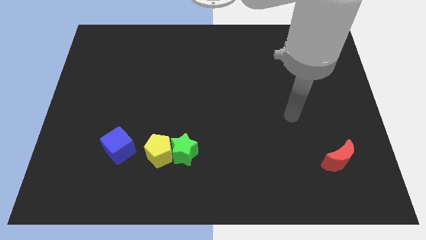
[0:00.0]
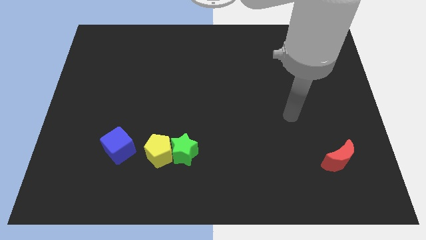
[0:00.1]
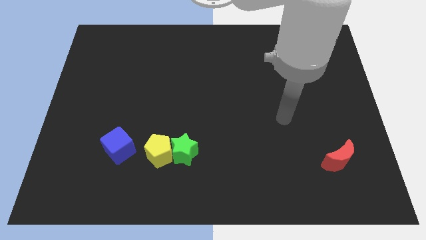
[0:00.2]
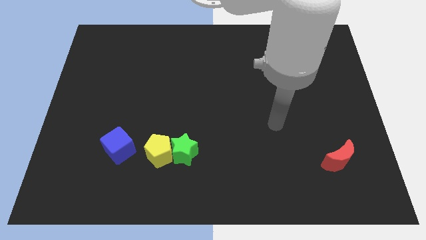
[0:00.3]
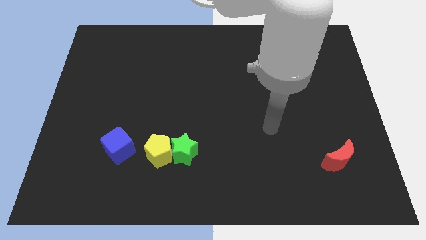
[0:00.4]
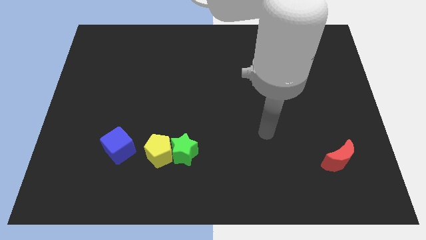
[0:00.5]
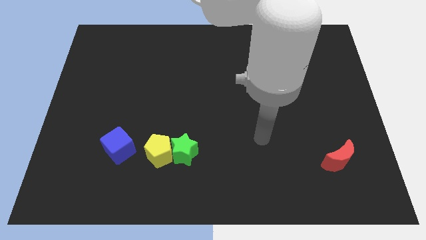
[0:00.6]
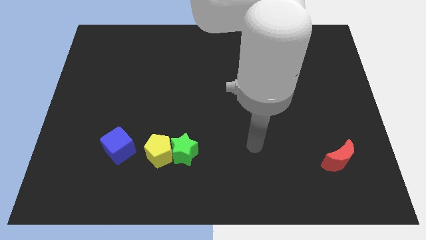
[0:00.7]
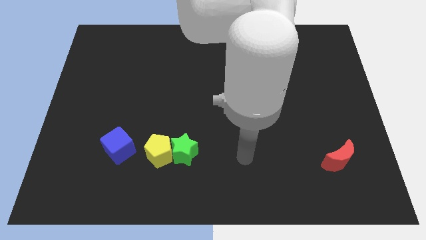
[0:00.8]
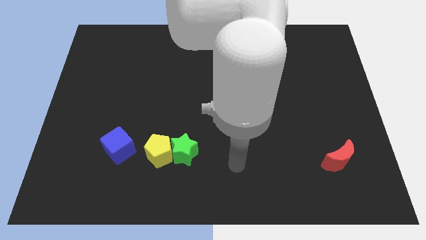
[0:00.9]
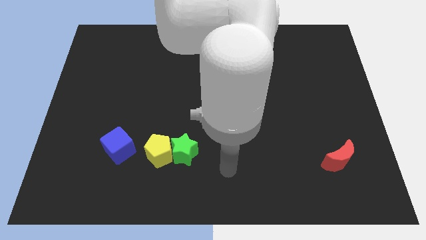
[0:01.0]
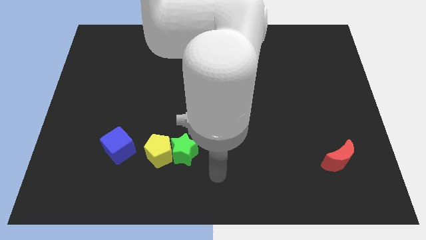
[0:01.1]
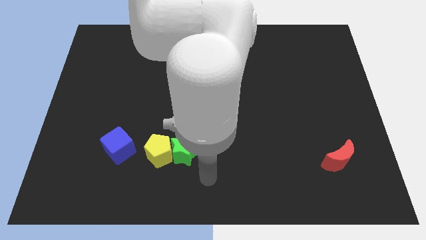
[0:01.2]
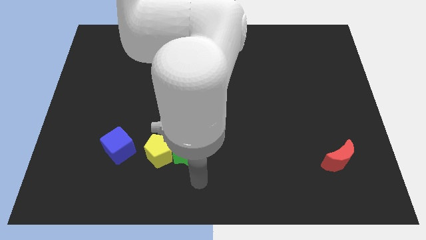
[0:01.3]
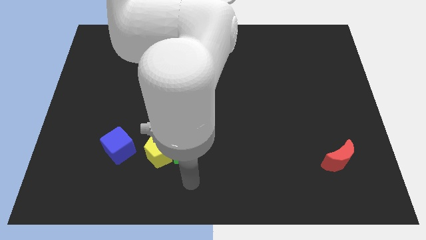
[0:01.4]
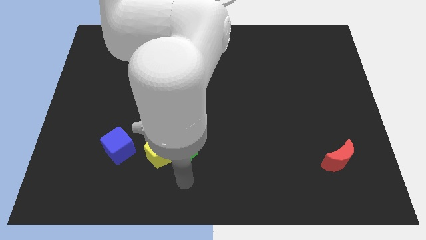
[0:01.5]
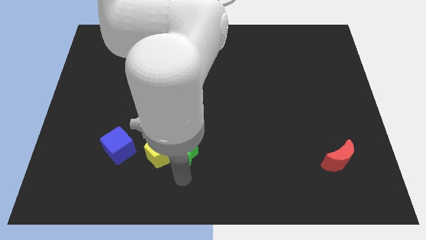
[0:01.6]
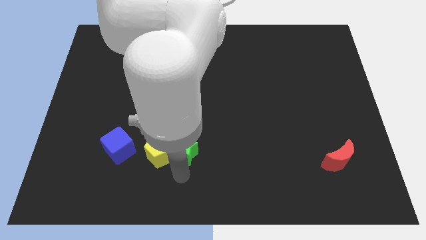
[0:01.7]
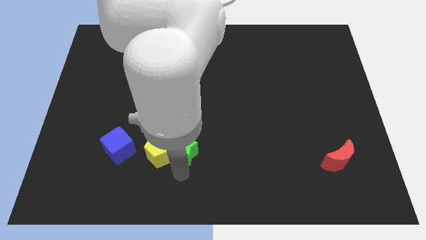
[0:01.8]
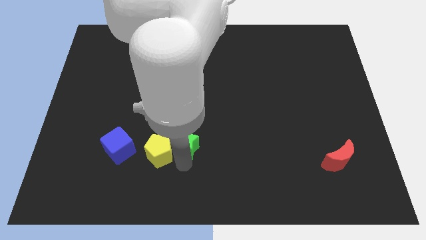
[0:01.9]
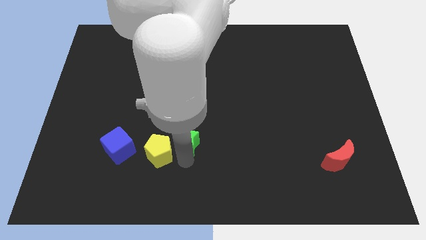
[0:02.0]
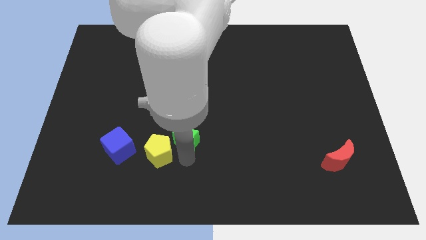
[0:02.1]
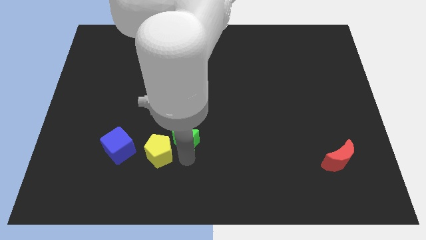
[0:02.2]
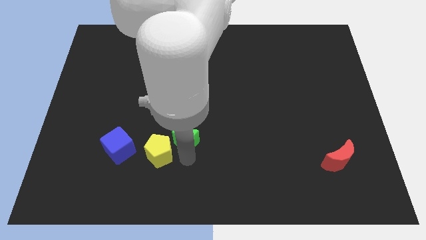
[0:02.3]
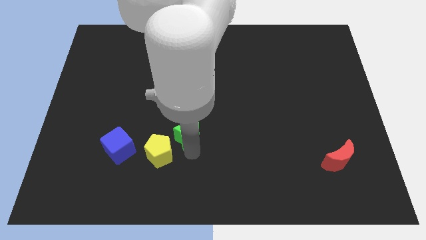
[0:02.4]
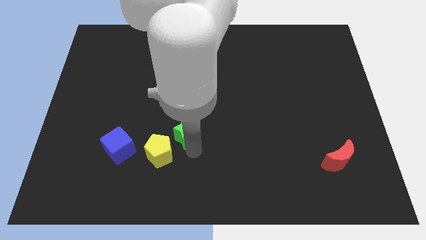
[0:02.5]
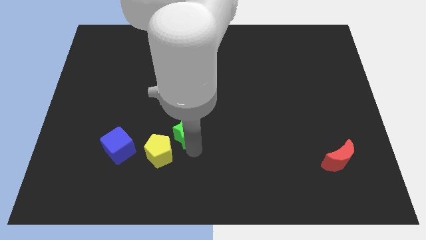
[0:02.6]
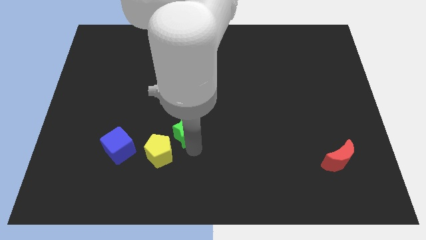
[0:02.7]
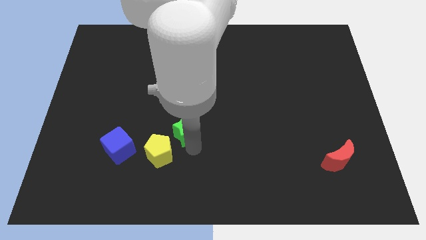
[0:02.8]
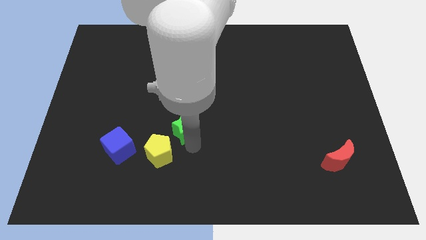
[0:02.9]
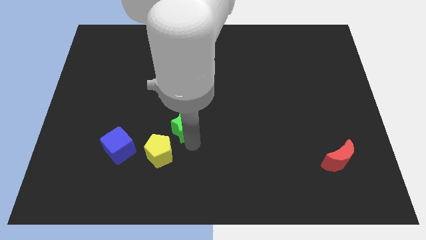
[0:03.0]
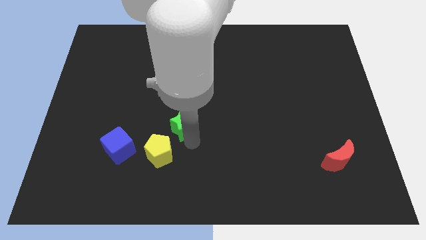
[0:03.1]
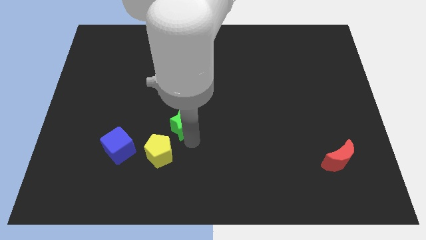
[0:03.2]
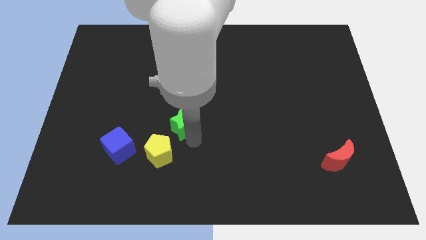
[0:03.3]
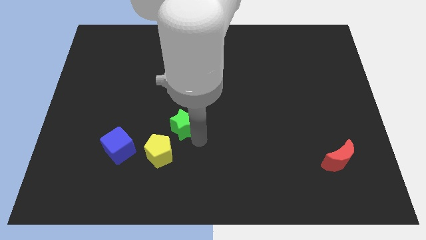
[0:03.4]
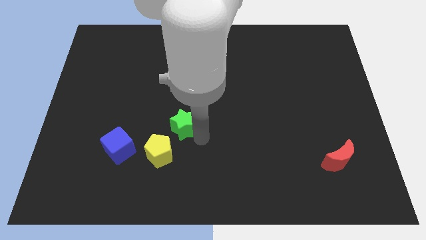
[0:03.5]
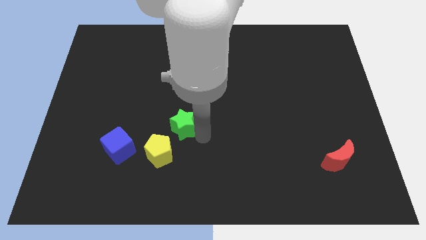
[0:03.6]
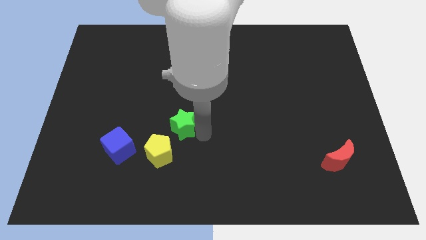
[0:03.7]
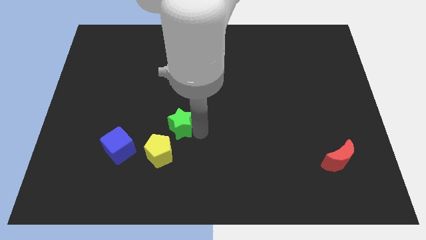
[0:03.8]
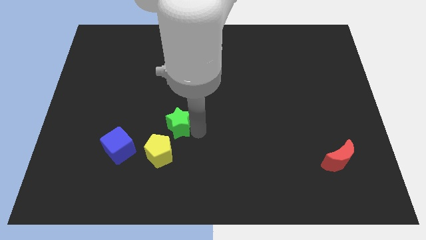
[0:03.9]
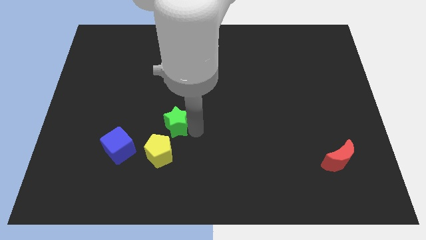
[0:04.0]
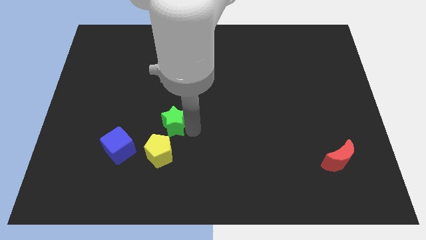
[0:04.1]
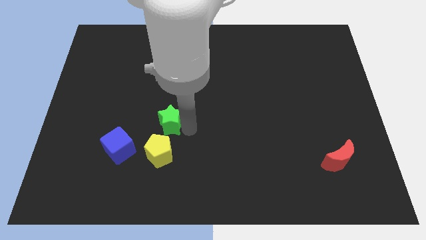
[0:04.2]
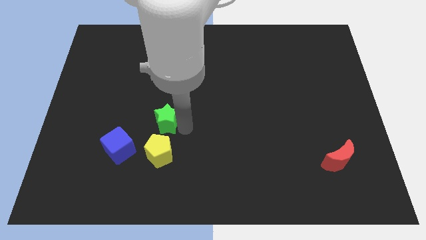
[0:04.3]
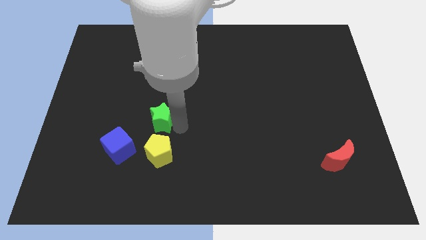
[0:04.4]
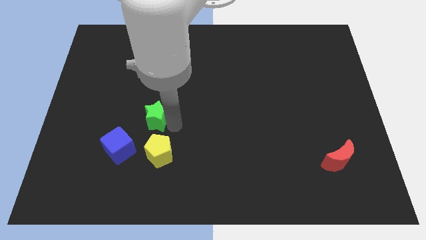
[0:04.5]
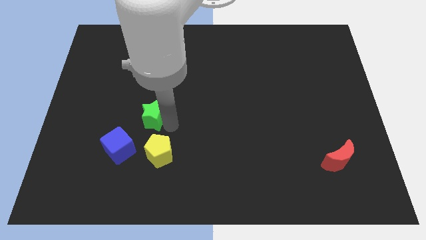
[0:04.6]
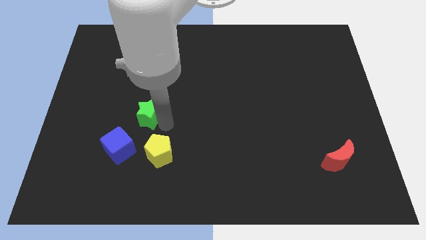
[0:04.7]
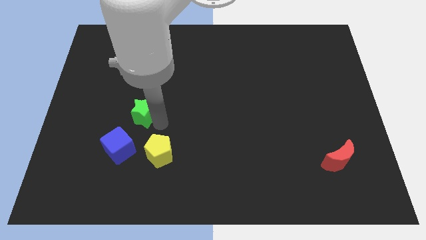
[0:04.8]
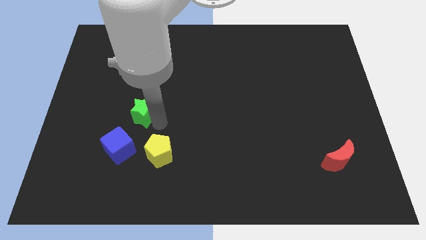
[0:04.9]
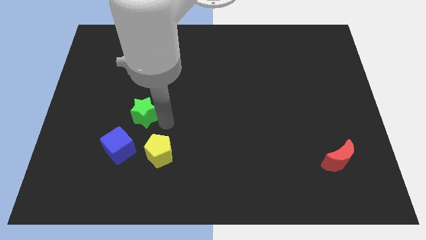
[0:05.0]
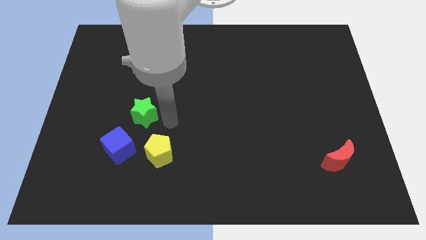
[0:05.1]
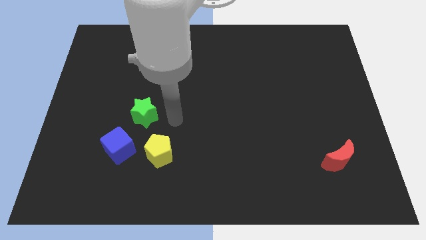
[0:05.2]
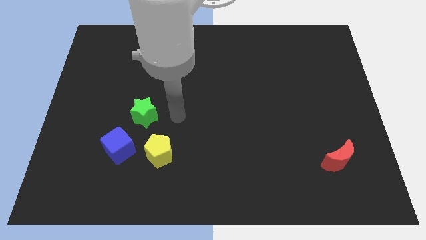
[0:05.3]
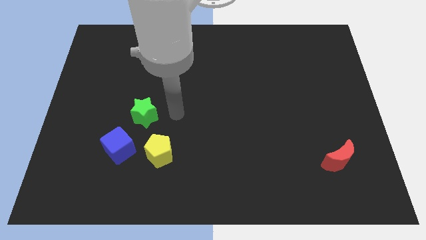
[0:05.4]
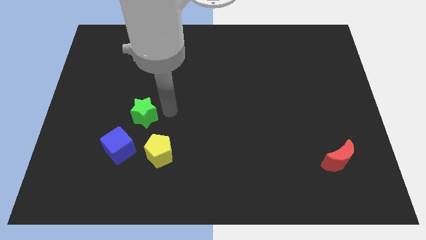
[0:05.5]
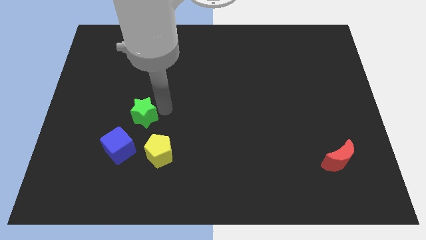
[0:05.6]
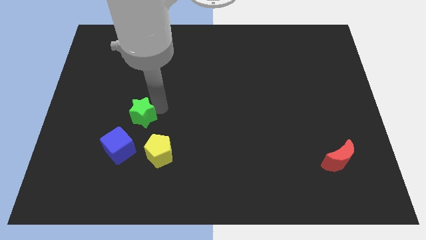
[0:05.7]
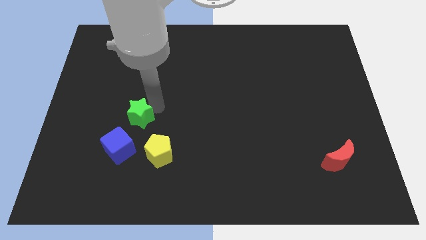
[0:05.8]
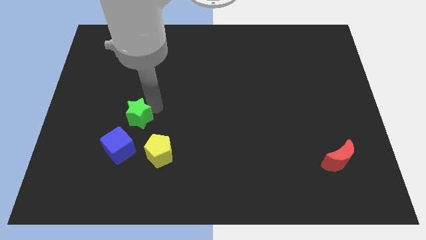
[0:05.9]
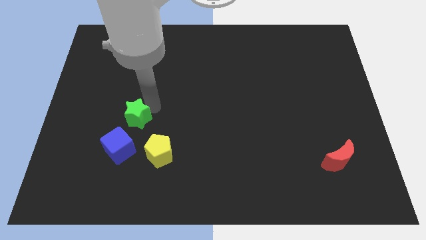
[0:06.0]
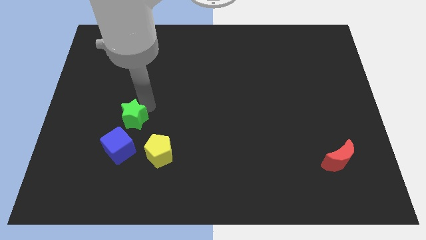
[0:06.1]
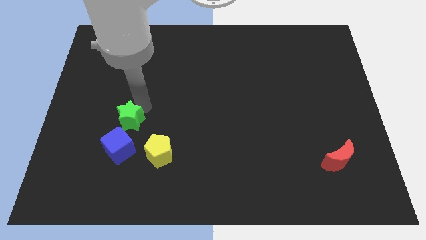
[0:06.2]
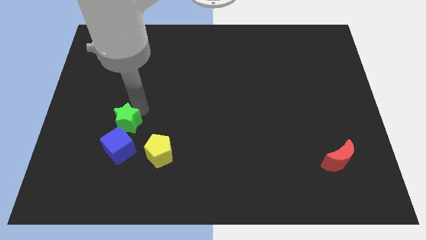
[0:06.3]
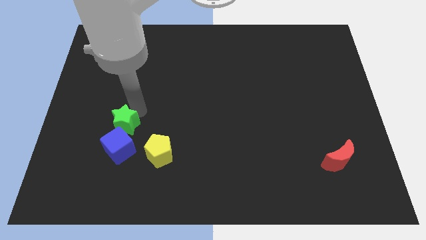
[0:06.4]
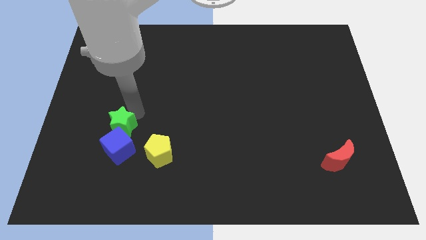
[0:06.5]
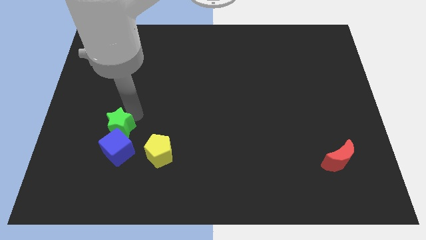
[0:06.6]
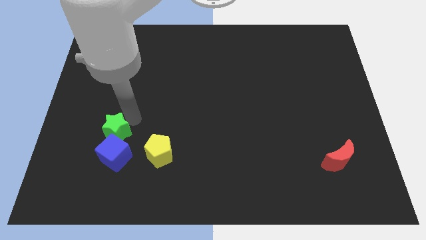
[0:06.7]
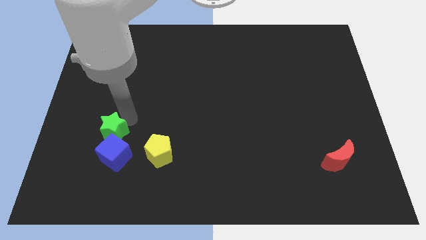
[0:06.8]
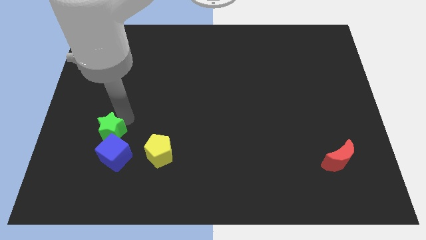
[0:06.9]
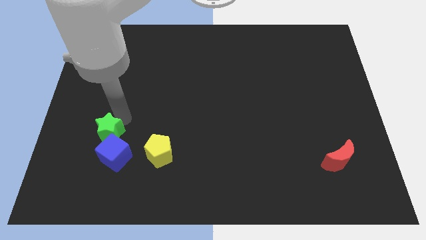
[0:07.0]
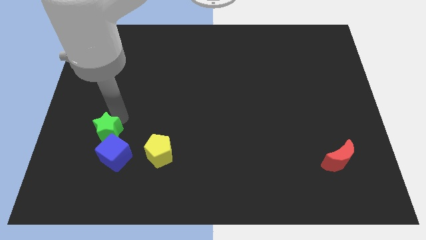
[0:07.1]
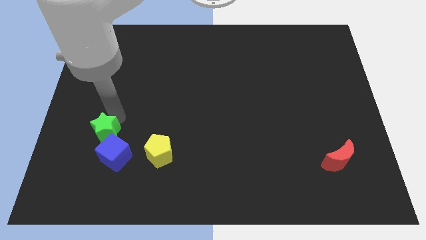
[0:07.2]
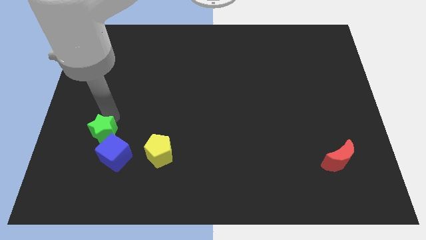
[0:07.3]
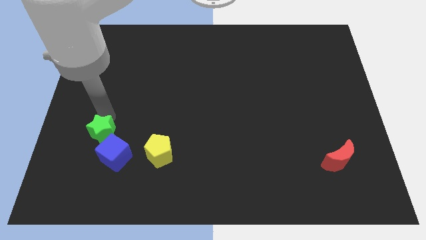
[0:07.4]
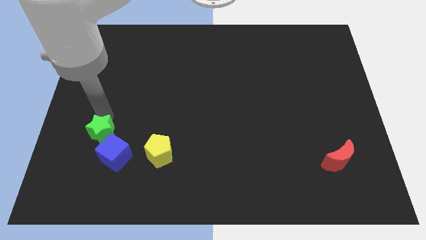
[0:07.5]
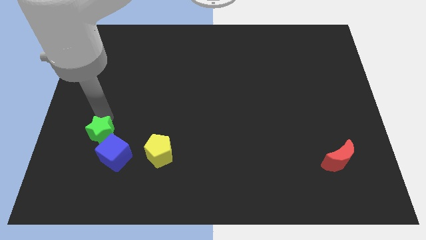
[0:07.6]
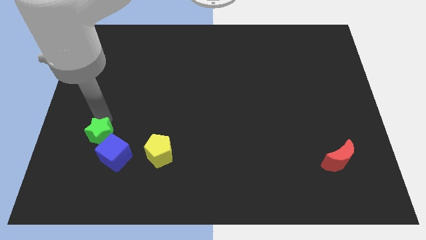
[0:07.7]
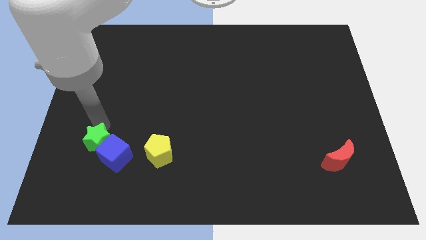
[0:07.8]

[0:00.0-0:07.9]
put the green block close to the blue cube

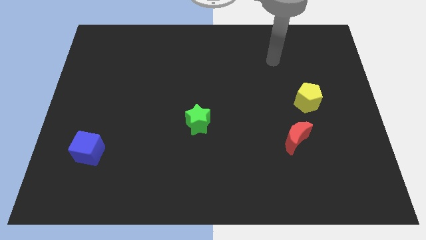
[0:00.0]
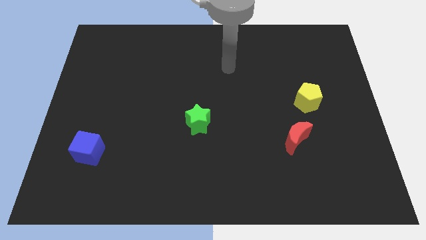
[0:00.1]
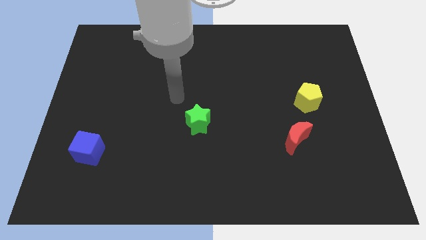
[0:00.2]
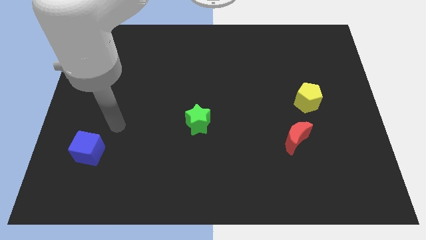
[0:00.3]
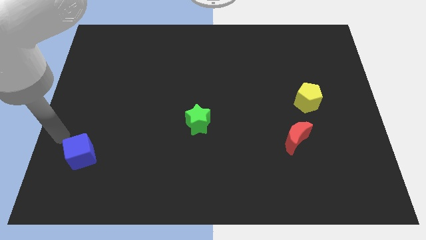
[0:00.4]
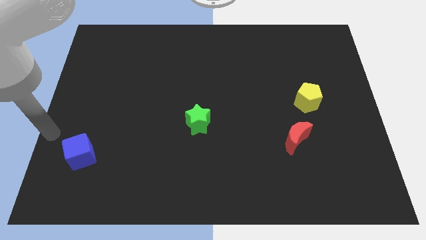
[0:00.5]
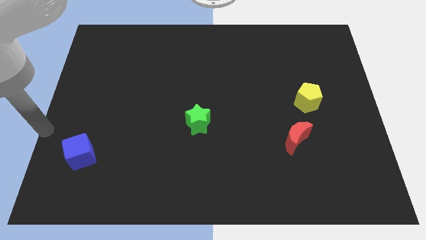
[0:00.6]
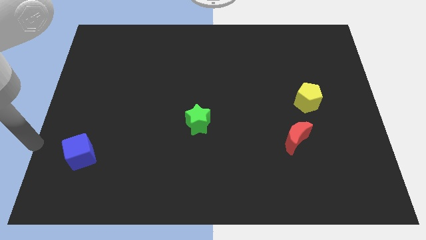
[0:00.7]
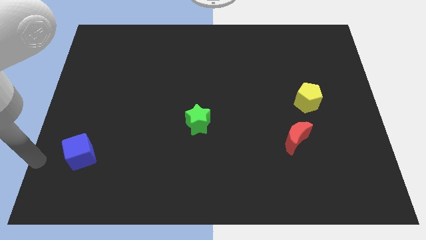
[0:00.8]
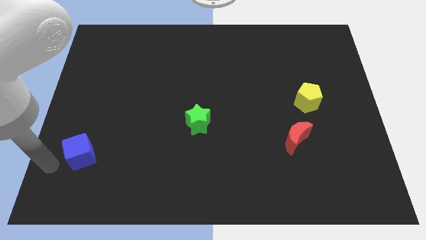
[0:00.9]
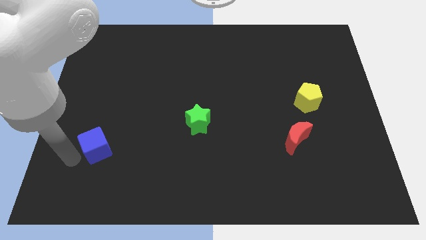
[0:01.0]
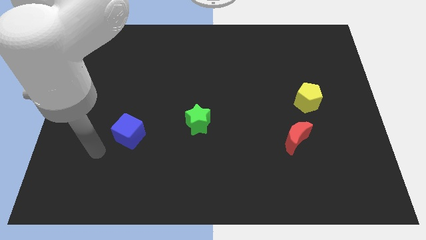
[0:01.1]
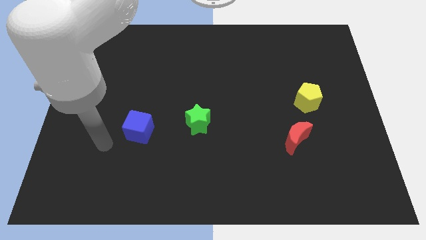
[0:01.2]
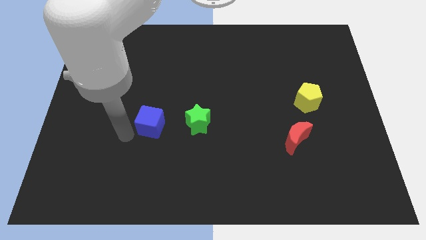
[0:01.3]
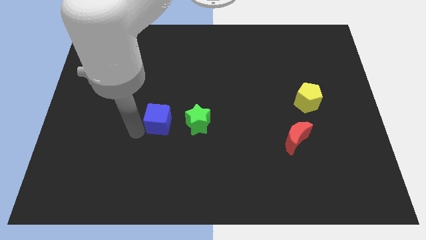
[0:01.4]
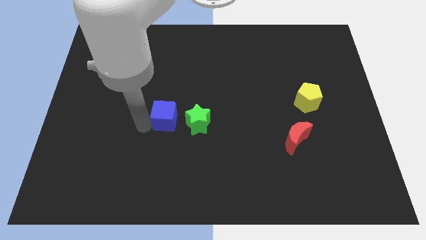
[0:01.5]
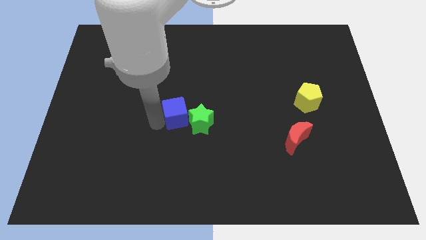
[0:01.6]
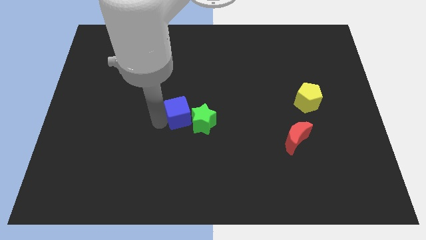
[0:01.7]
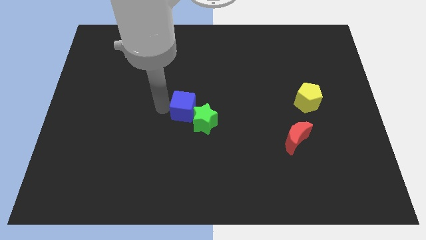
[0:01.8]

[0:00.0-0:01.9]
put the cube close to the green star
